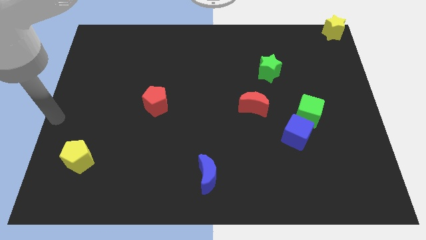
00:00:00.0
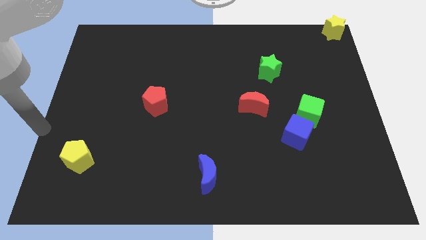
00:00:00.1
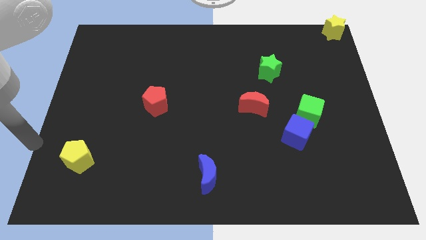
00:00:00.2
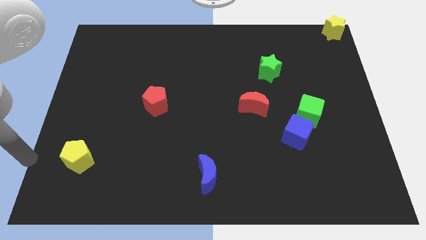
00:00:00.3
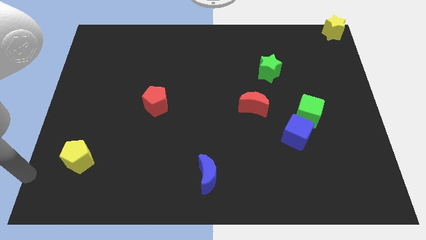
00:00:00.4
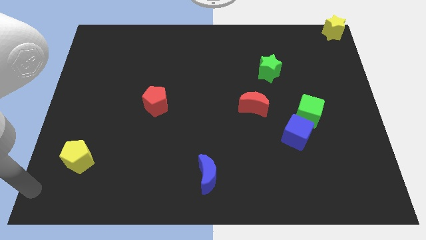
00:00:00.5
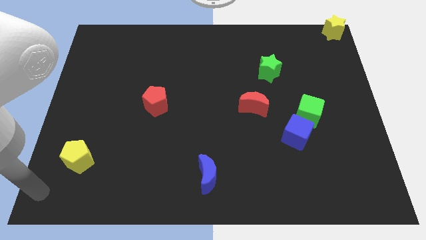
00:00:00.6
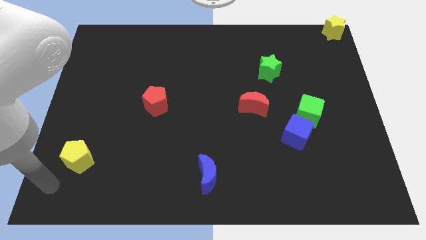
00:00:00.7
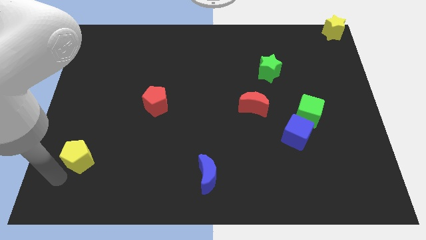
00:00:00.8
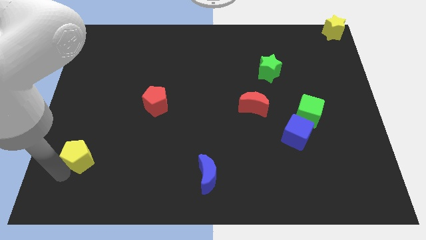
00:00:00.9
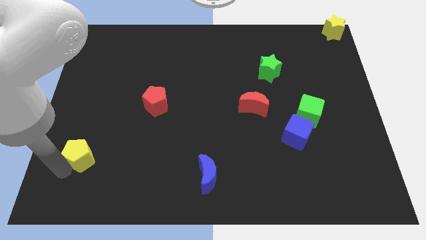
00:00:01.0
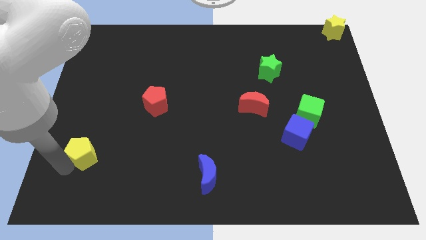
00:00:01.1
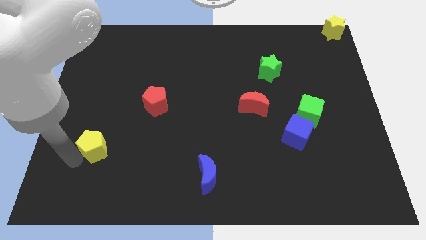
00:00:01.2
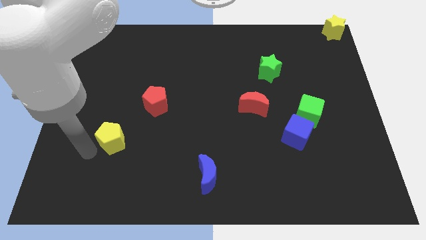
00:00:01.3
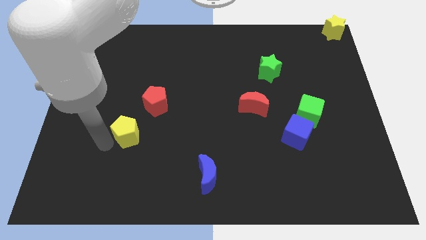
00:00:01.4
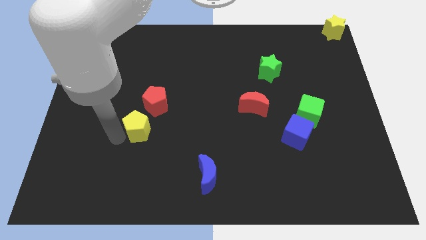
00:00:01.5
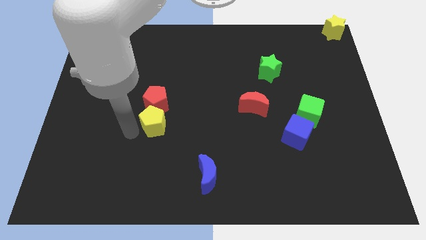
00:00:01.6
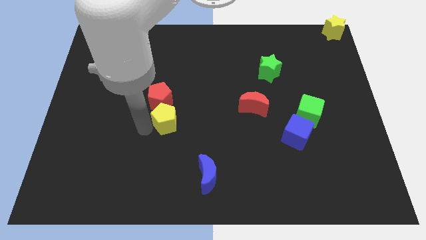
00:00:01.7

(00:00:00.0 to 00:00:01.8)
push the yellow pentagon into the red pentagon

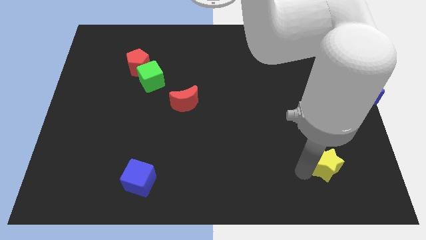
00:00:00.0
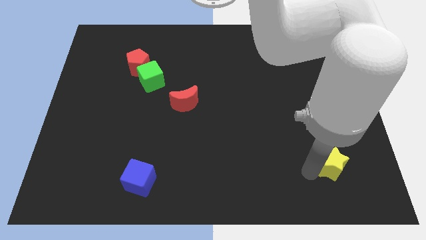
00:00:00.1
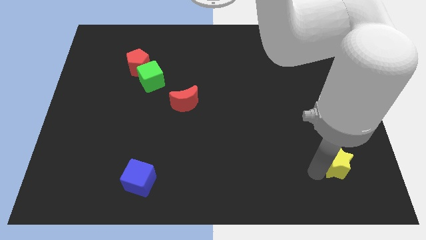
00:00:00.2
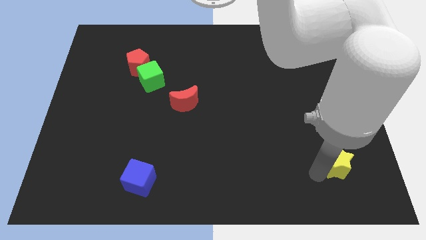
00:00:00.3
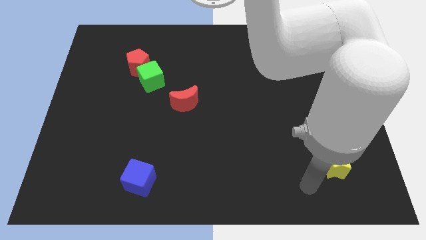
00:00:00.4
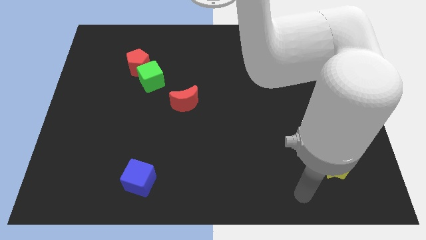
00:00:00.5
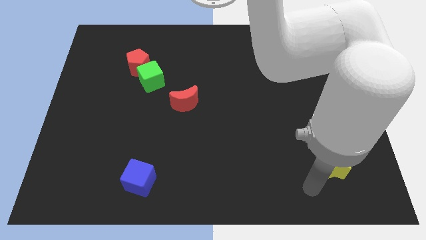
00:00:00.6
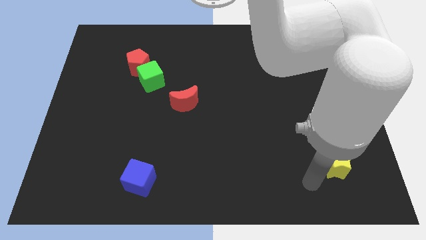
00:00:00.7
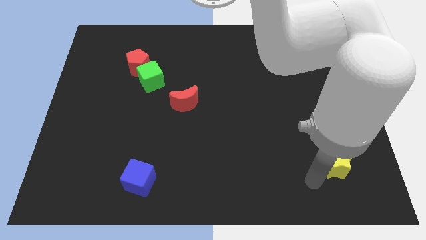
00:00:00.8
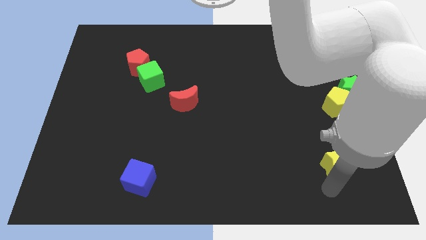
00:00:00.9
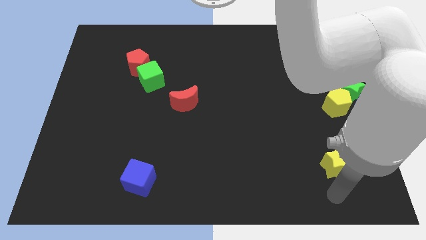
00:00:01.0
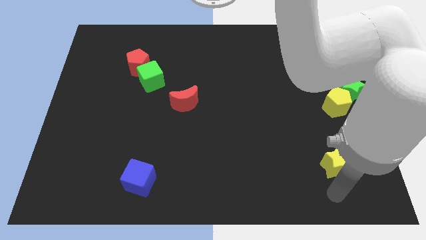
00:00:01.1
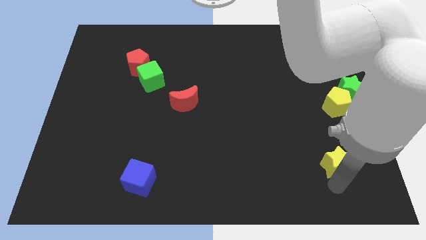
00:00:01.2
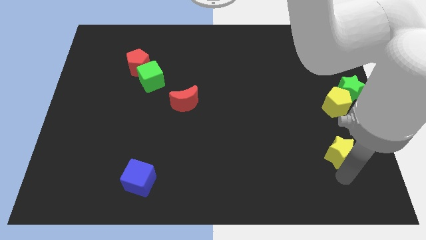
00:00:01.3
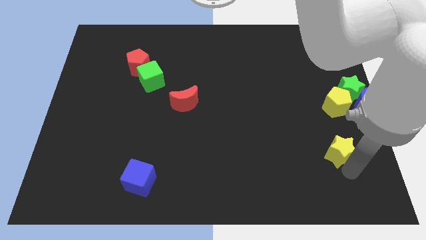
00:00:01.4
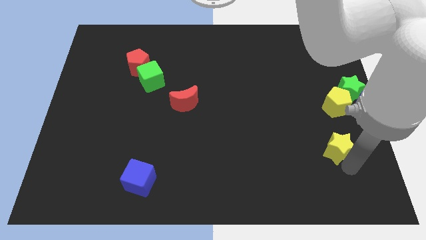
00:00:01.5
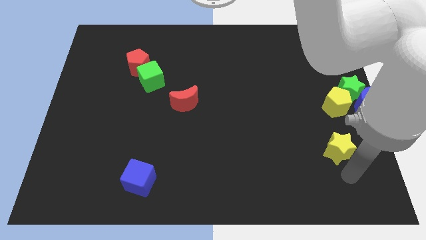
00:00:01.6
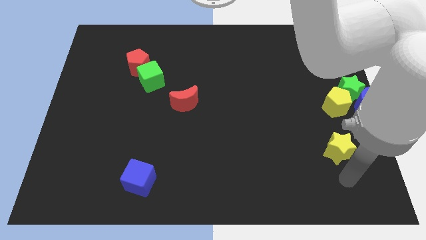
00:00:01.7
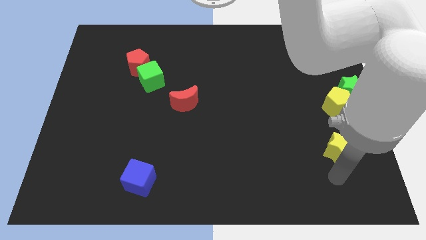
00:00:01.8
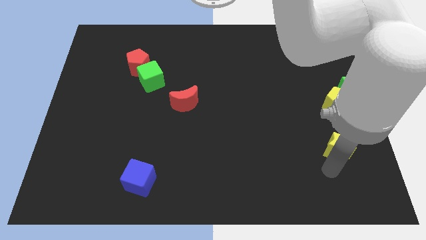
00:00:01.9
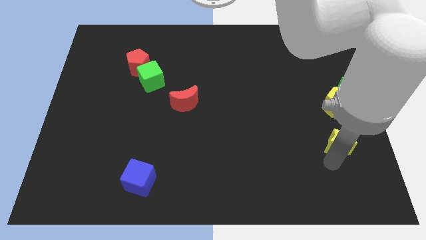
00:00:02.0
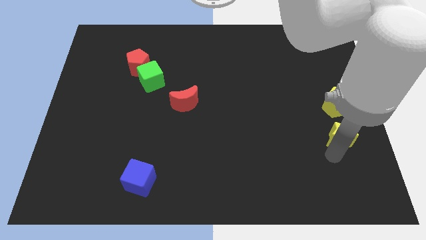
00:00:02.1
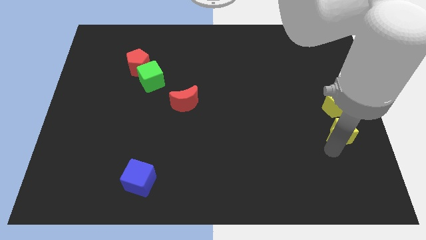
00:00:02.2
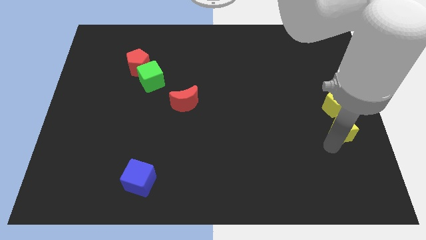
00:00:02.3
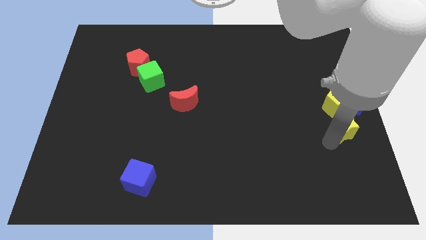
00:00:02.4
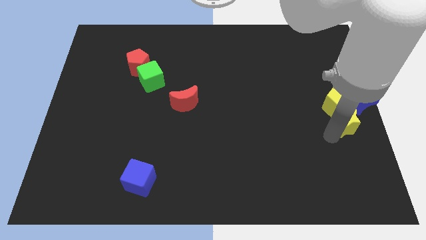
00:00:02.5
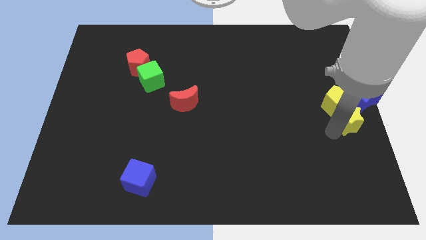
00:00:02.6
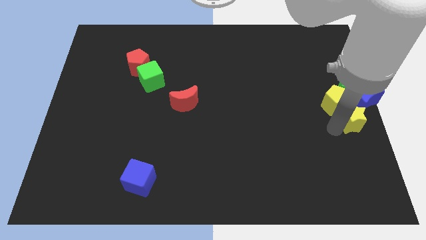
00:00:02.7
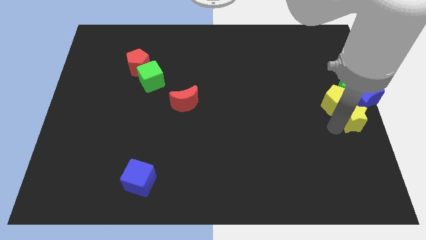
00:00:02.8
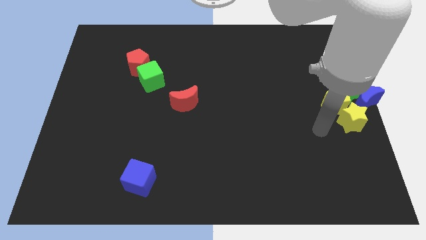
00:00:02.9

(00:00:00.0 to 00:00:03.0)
move yellow star into group of blocks

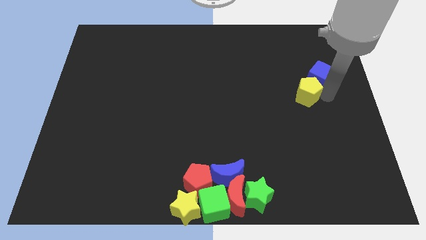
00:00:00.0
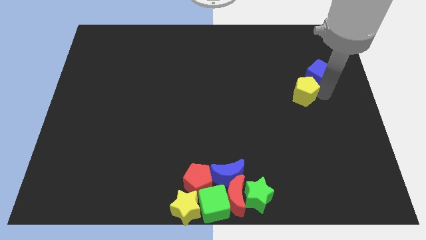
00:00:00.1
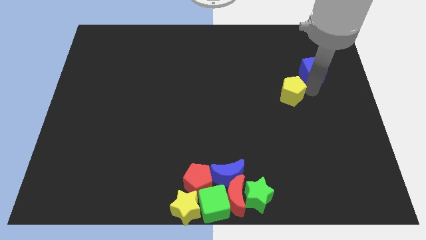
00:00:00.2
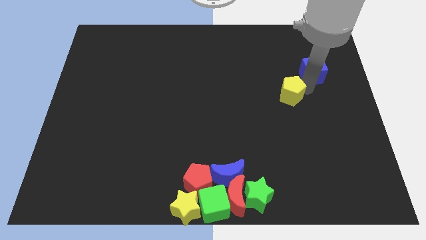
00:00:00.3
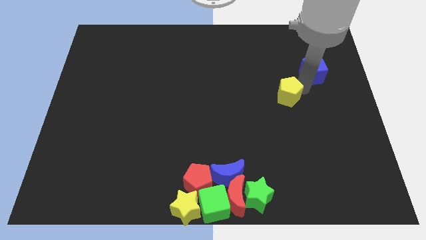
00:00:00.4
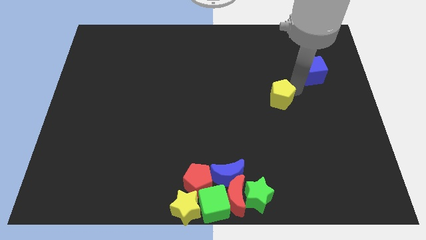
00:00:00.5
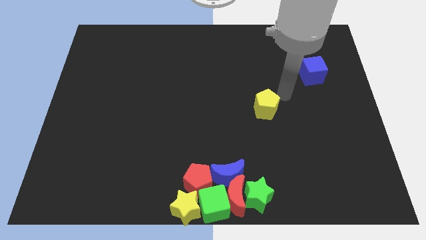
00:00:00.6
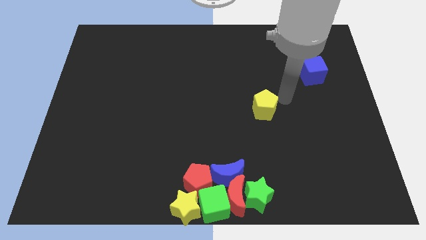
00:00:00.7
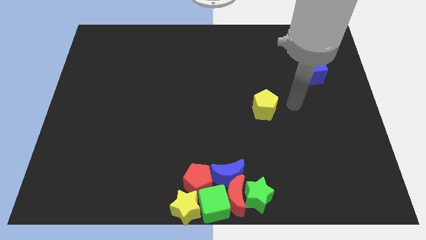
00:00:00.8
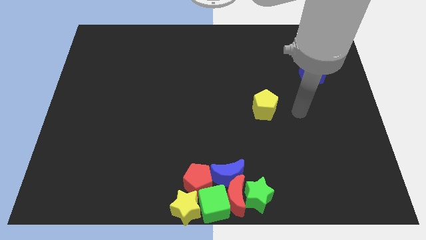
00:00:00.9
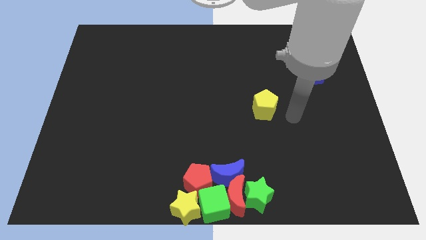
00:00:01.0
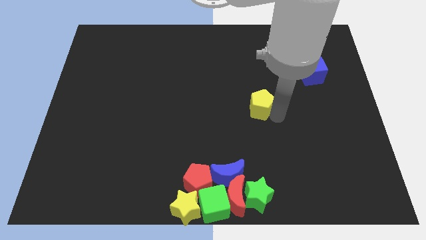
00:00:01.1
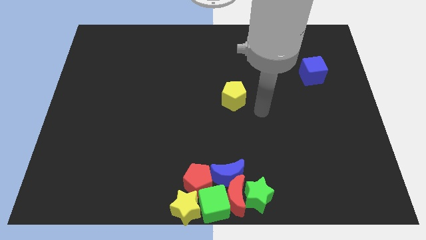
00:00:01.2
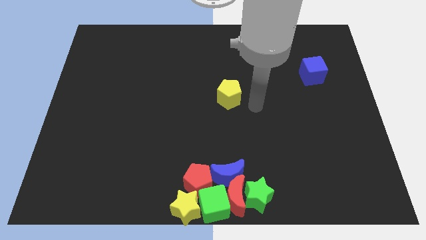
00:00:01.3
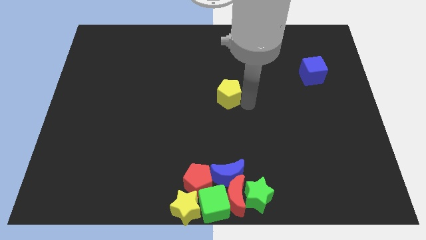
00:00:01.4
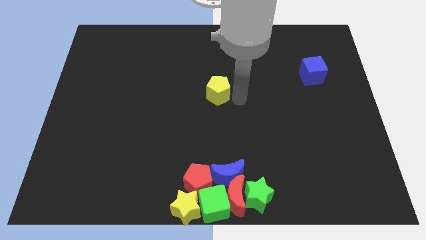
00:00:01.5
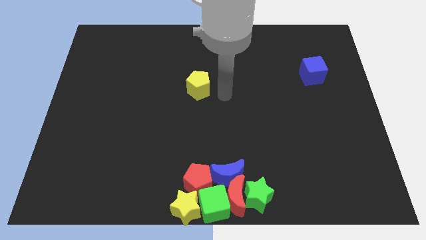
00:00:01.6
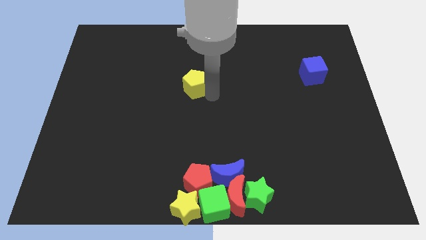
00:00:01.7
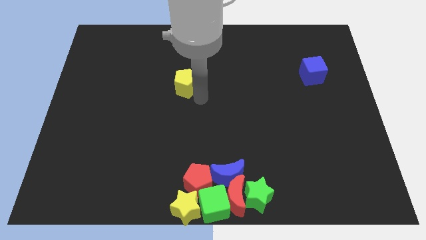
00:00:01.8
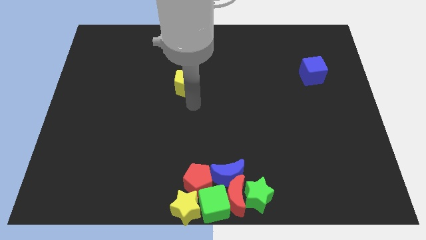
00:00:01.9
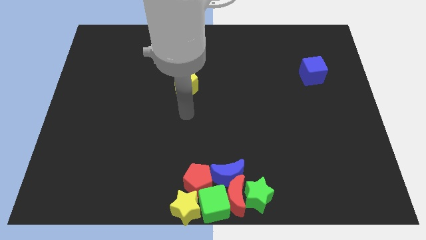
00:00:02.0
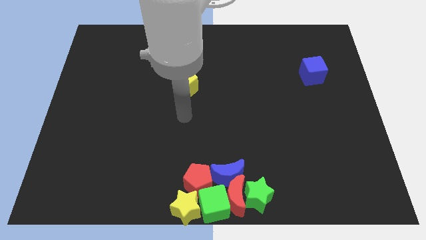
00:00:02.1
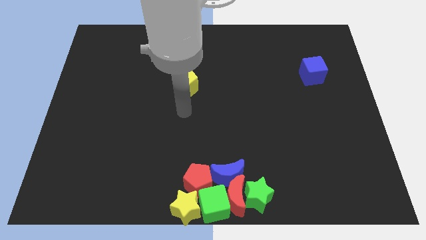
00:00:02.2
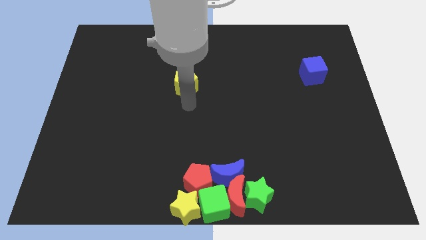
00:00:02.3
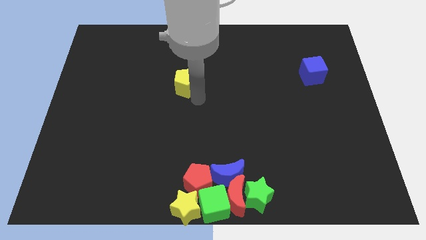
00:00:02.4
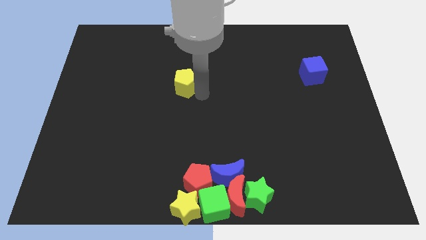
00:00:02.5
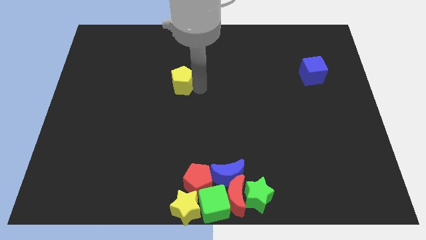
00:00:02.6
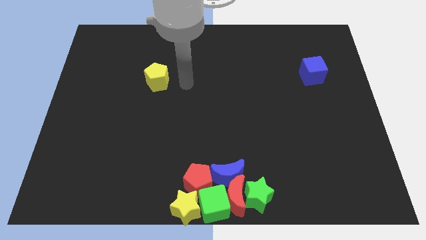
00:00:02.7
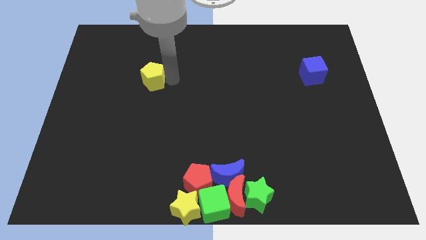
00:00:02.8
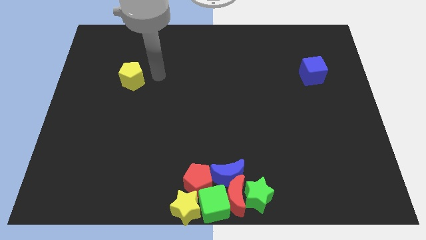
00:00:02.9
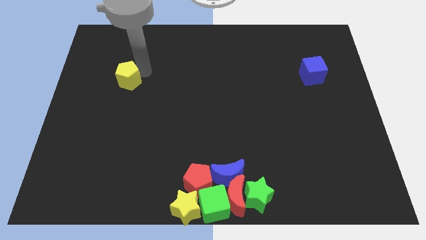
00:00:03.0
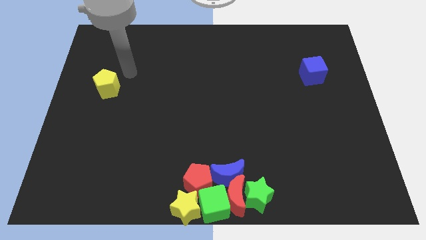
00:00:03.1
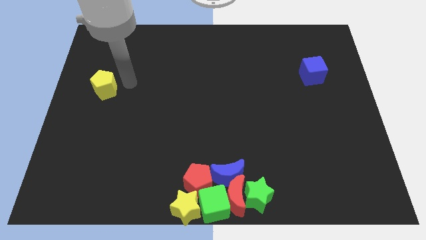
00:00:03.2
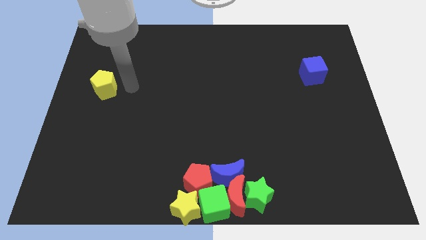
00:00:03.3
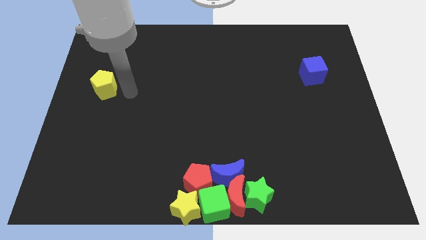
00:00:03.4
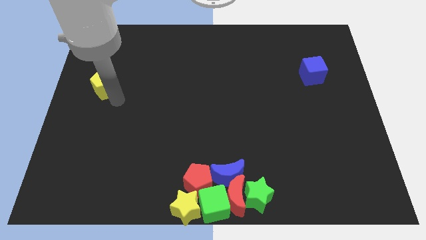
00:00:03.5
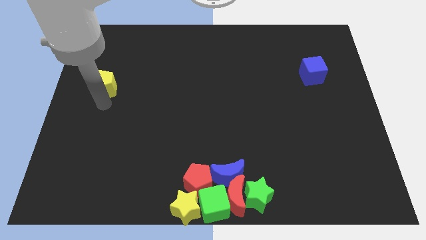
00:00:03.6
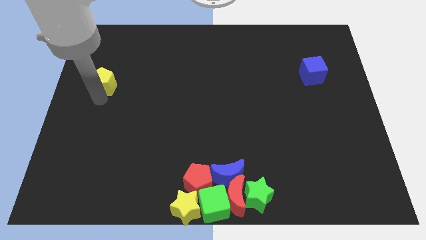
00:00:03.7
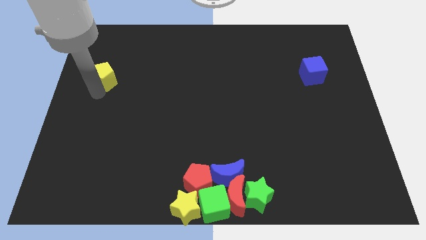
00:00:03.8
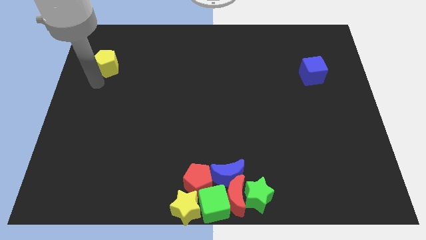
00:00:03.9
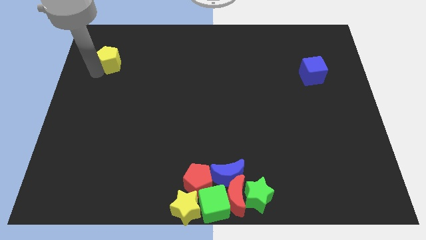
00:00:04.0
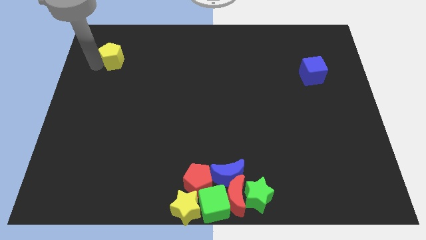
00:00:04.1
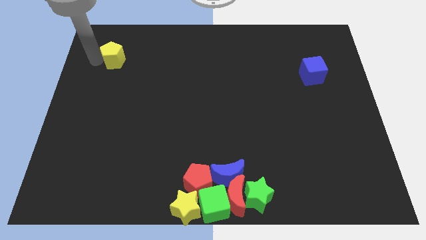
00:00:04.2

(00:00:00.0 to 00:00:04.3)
push the yellow pentagon towards the top left
